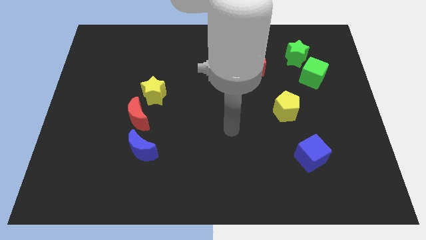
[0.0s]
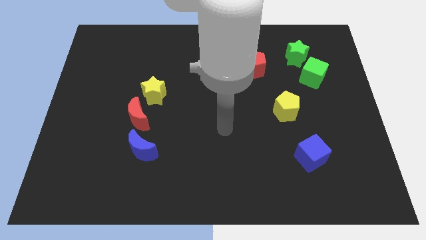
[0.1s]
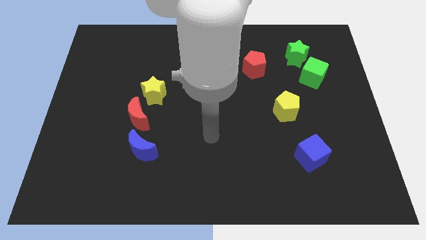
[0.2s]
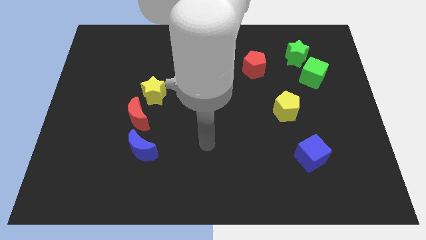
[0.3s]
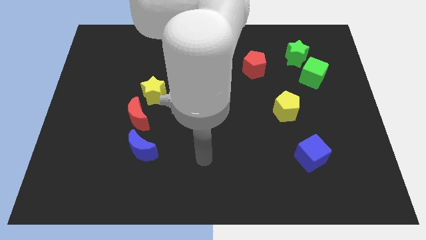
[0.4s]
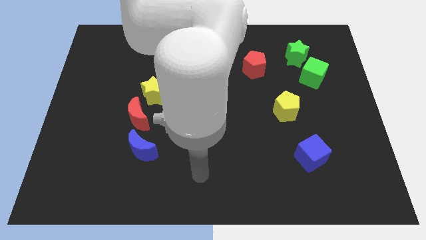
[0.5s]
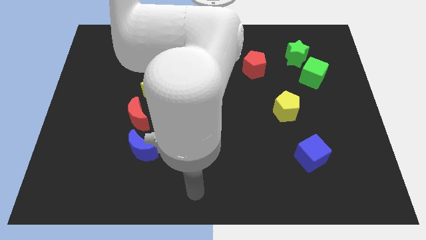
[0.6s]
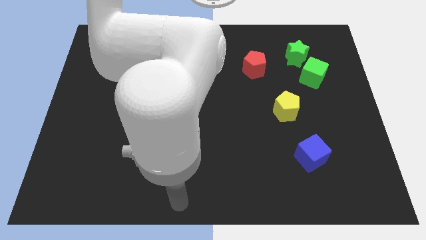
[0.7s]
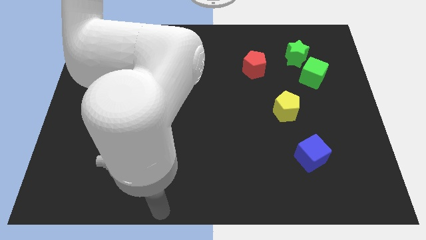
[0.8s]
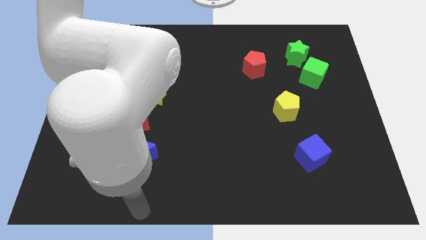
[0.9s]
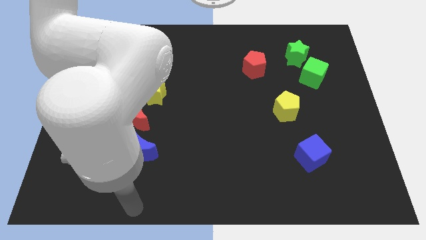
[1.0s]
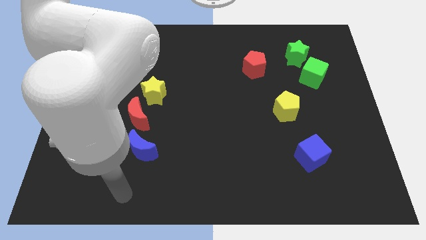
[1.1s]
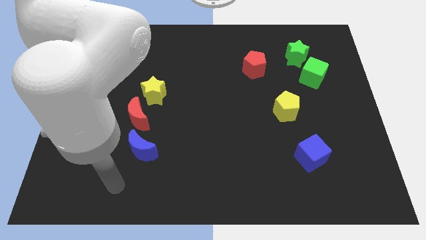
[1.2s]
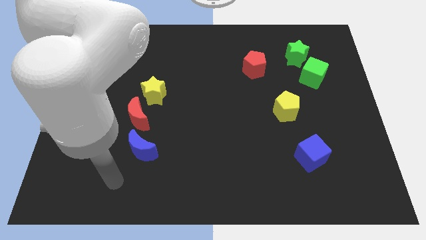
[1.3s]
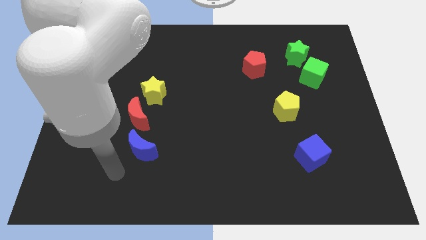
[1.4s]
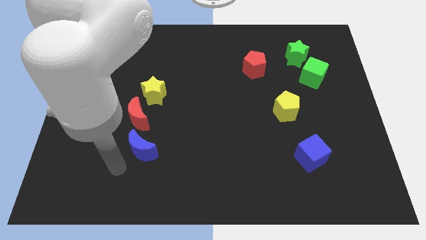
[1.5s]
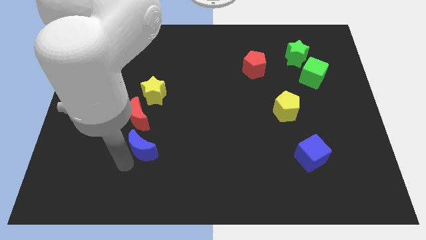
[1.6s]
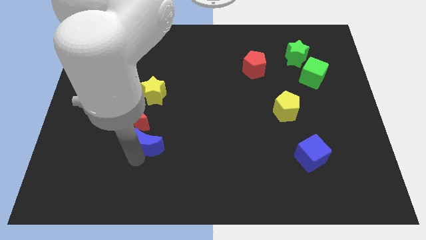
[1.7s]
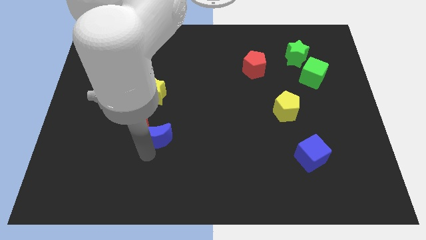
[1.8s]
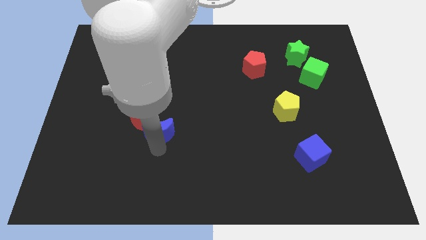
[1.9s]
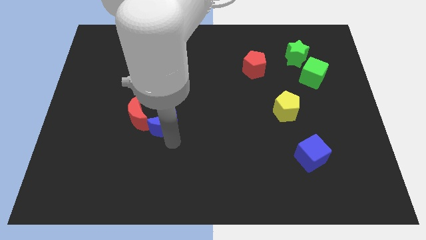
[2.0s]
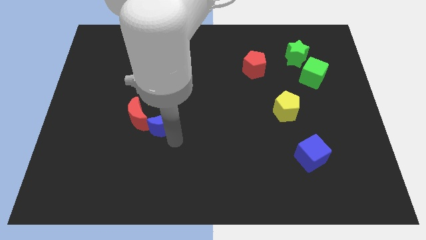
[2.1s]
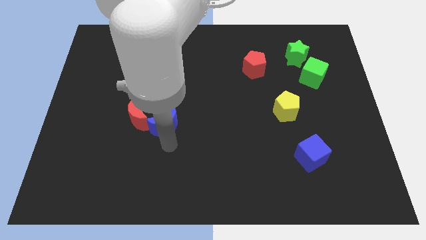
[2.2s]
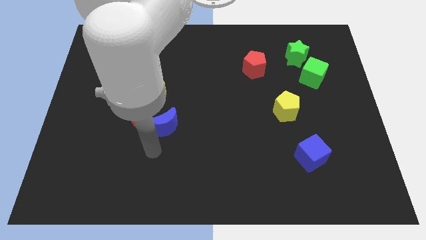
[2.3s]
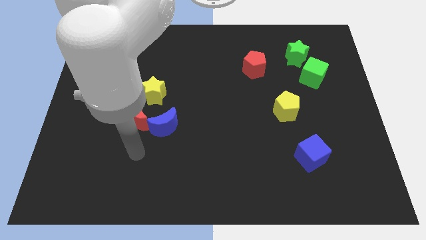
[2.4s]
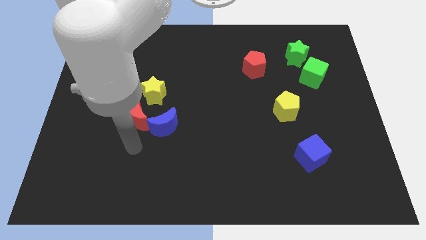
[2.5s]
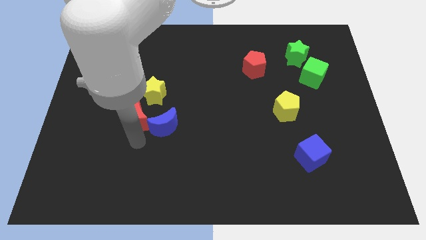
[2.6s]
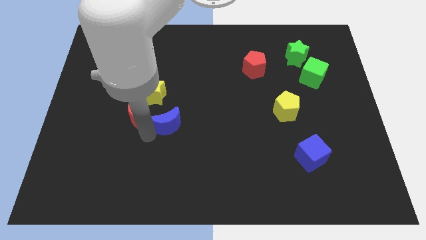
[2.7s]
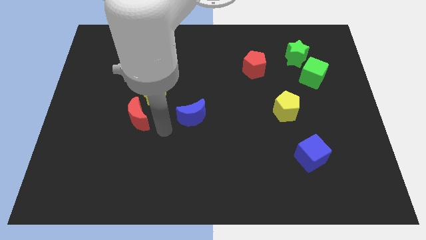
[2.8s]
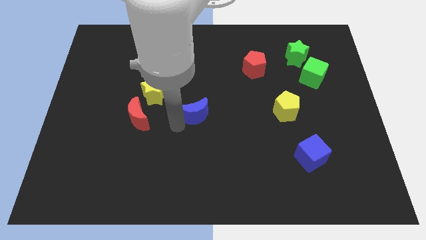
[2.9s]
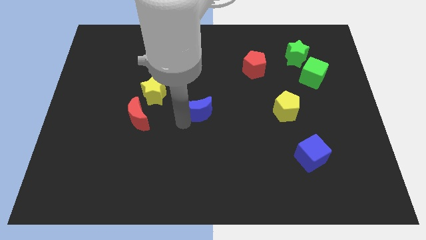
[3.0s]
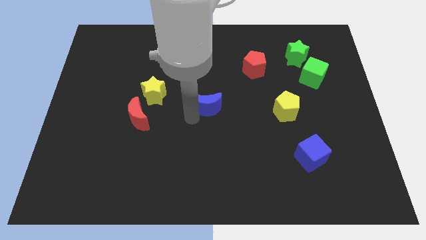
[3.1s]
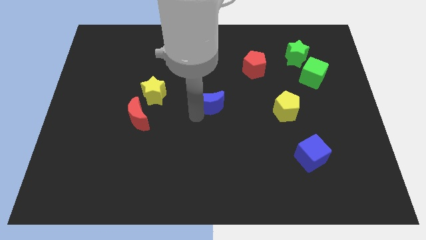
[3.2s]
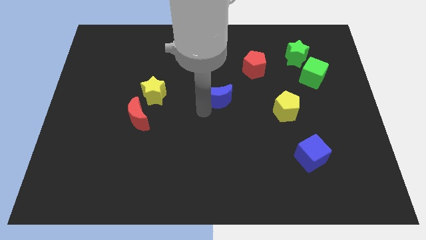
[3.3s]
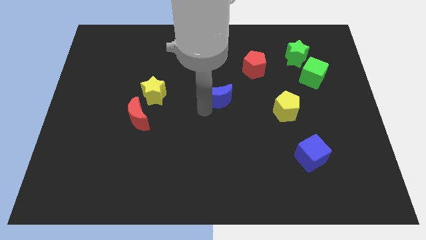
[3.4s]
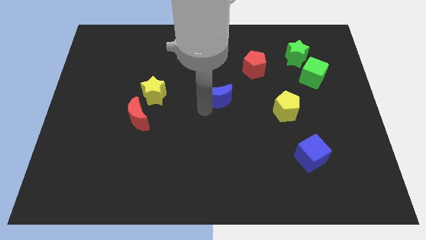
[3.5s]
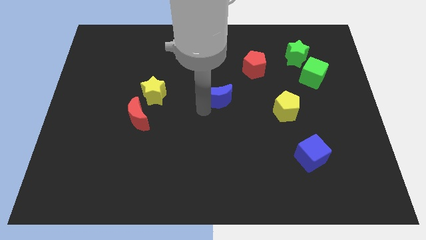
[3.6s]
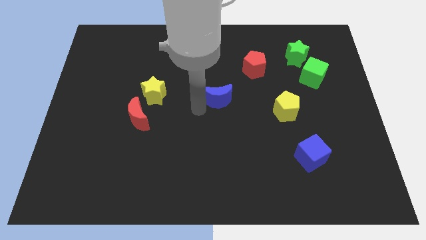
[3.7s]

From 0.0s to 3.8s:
push the blue moon away from the center of the board

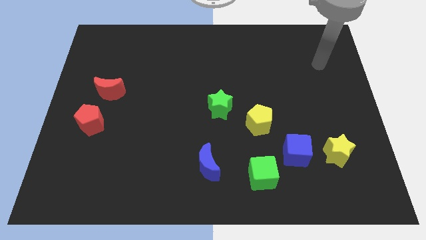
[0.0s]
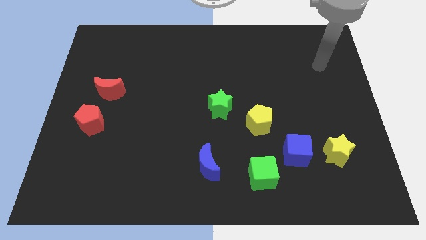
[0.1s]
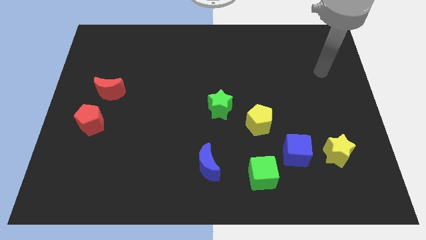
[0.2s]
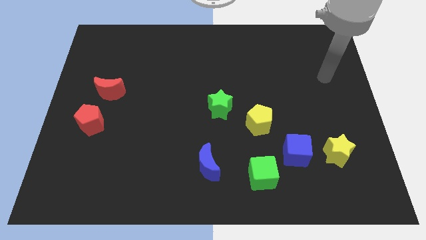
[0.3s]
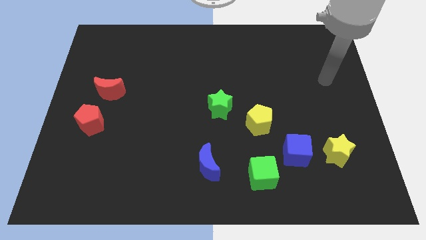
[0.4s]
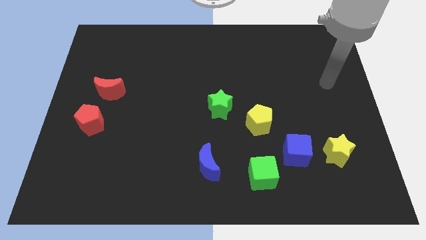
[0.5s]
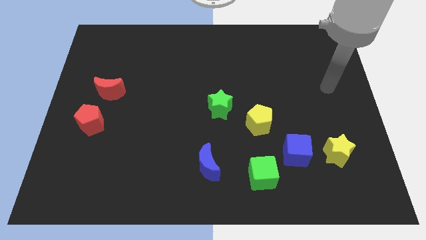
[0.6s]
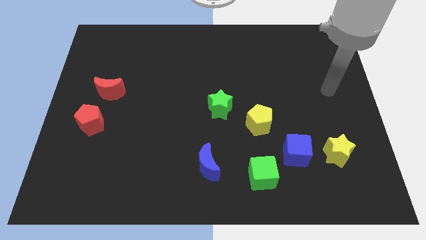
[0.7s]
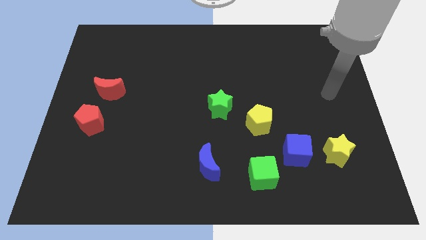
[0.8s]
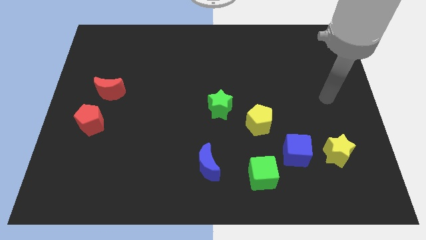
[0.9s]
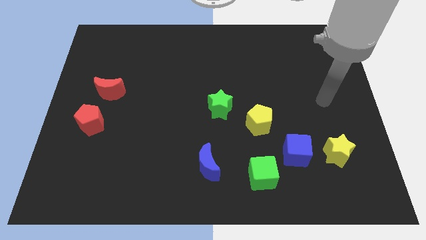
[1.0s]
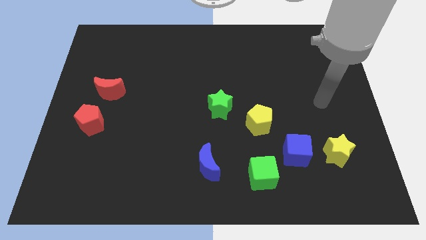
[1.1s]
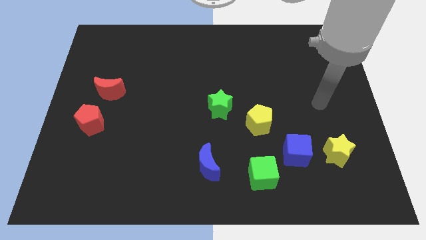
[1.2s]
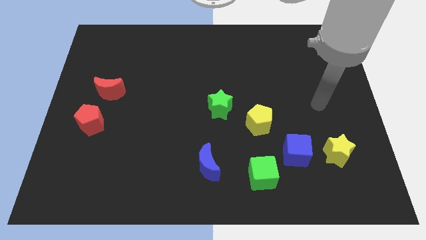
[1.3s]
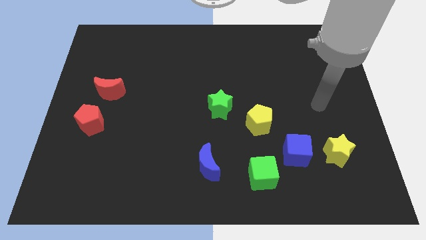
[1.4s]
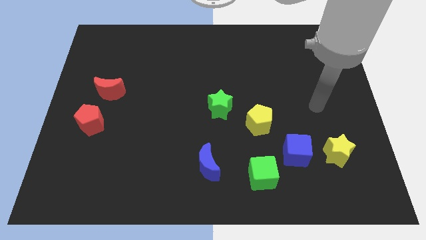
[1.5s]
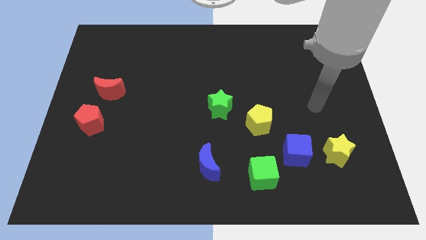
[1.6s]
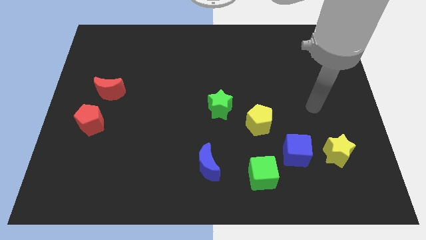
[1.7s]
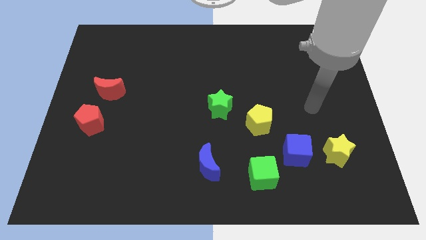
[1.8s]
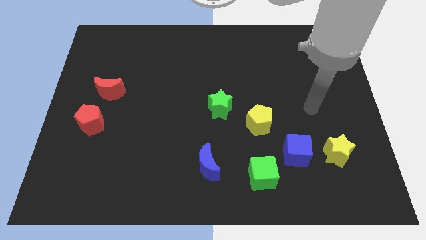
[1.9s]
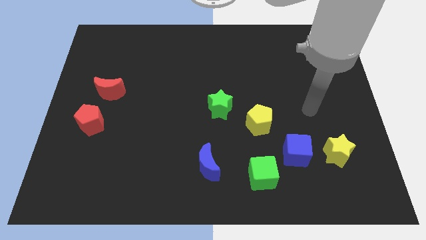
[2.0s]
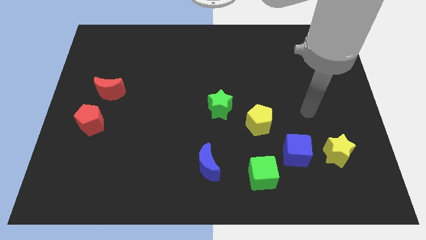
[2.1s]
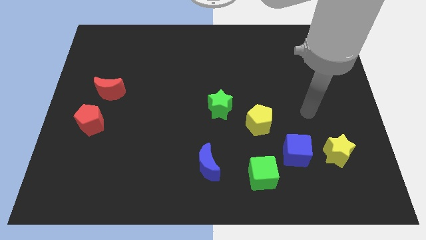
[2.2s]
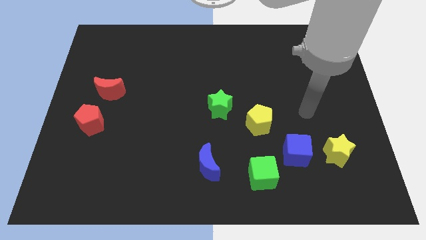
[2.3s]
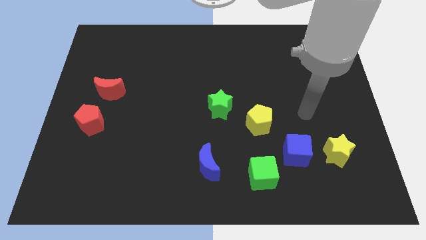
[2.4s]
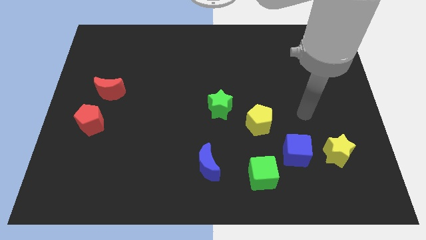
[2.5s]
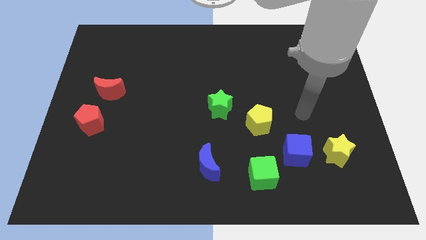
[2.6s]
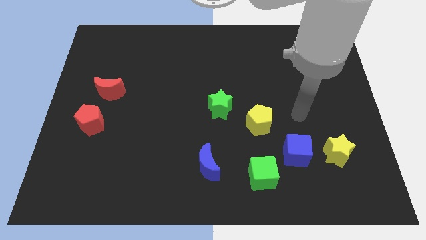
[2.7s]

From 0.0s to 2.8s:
move the arm towards blue cube

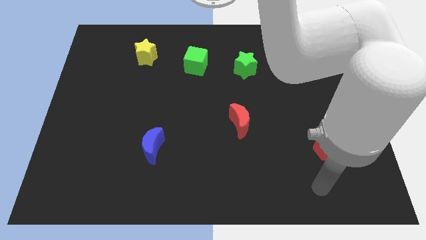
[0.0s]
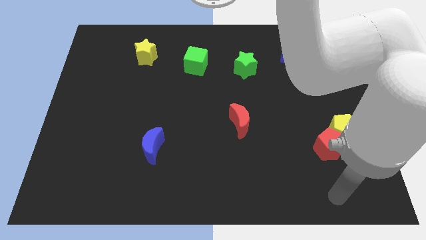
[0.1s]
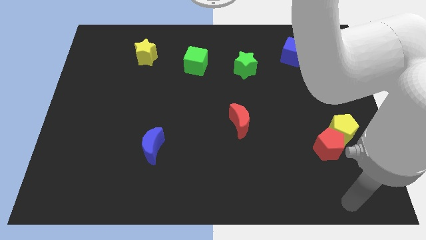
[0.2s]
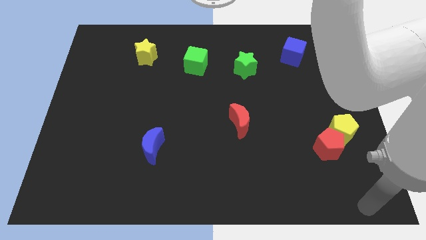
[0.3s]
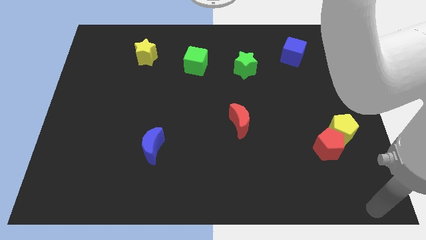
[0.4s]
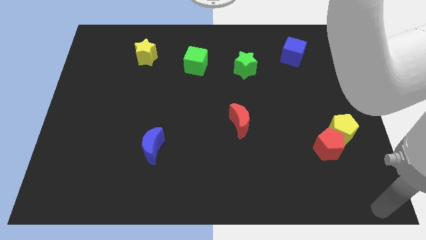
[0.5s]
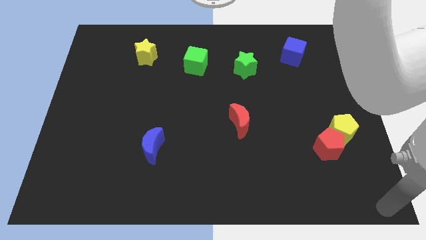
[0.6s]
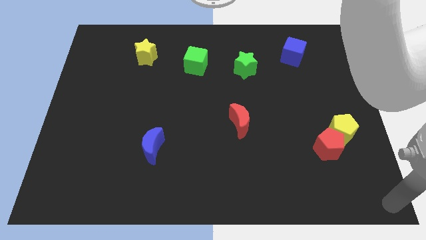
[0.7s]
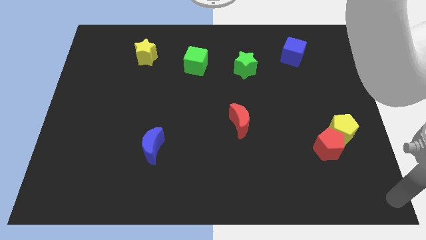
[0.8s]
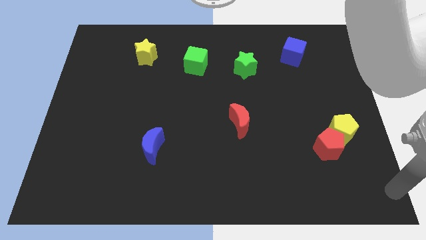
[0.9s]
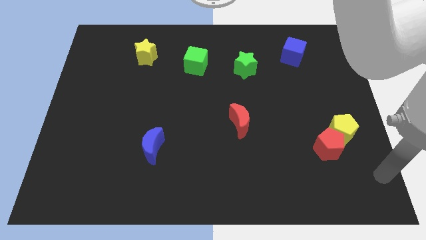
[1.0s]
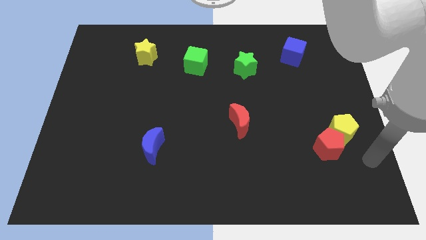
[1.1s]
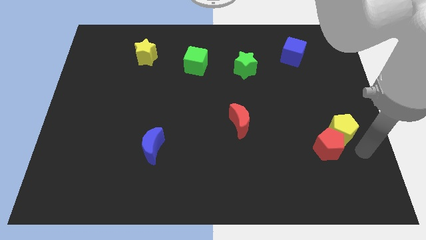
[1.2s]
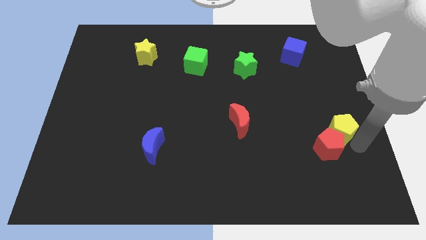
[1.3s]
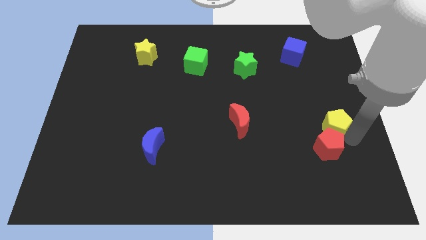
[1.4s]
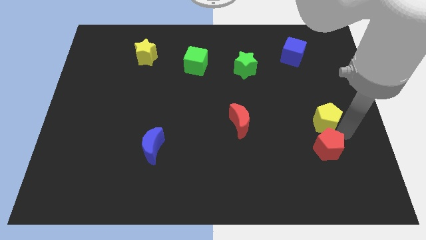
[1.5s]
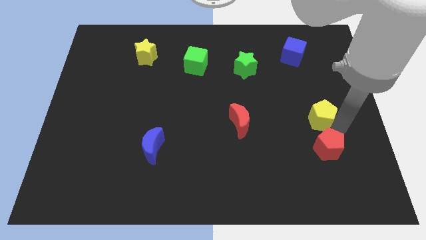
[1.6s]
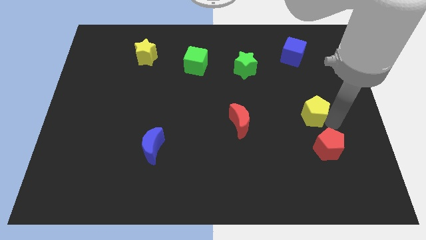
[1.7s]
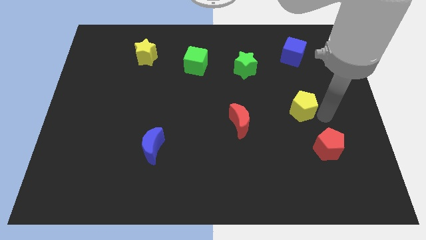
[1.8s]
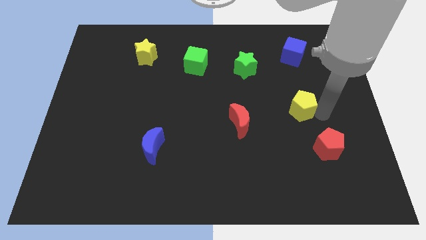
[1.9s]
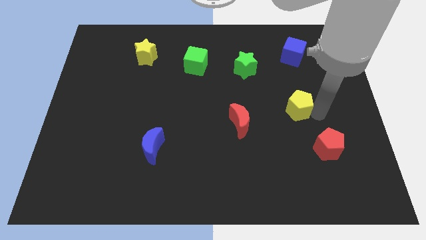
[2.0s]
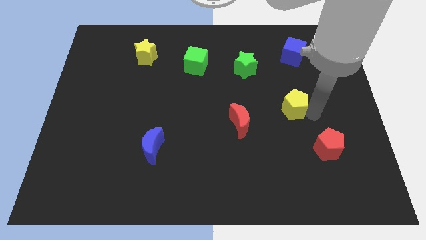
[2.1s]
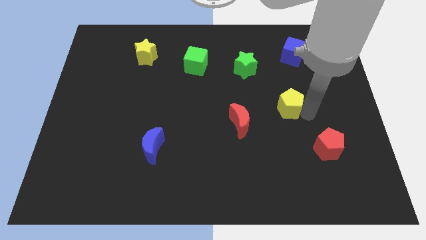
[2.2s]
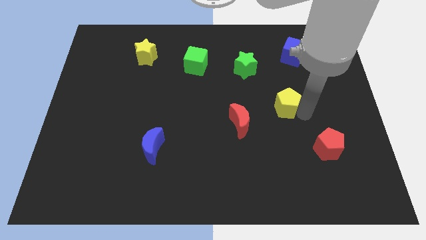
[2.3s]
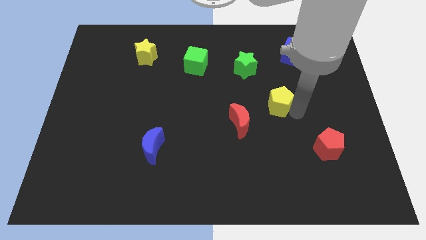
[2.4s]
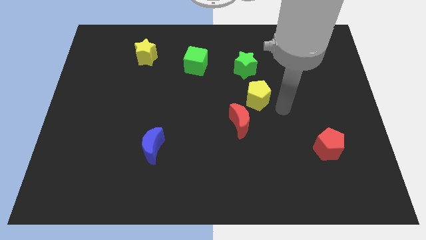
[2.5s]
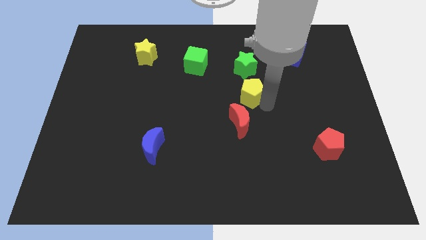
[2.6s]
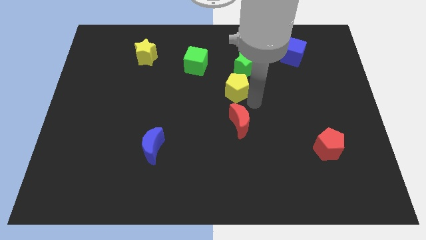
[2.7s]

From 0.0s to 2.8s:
move the yellow pentagon between green star and red moon
